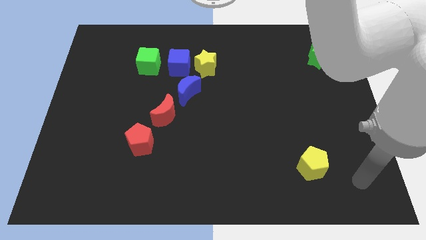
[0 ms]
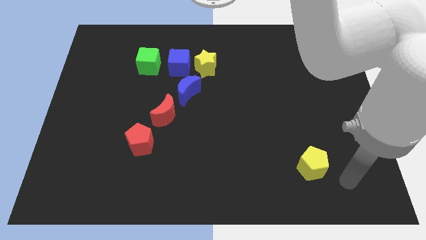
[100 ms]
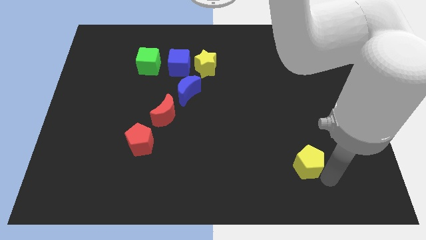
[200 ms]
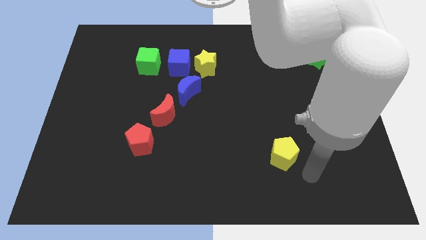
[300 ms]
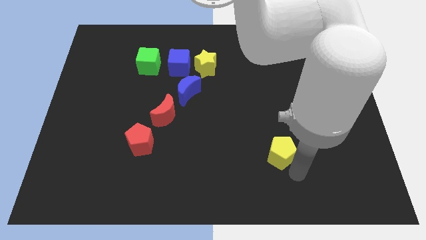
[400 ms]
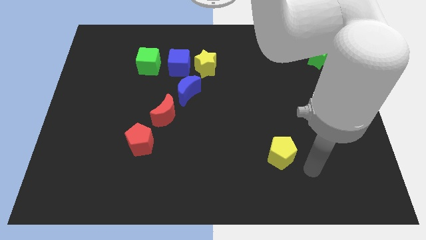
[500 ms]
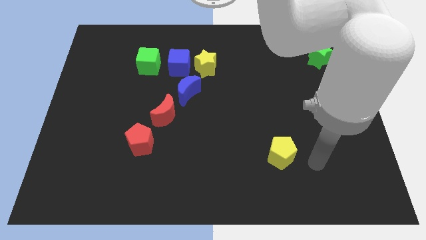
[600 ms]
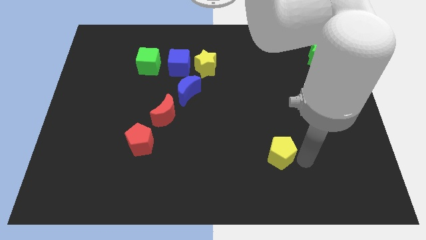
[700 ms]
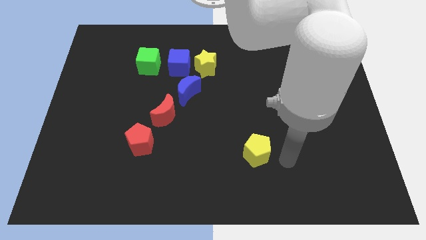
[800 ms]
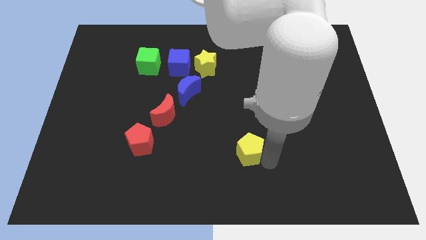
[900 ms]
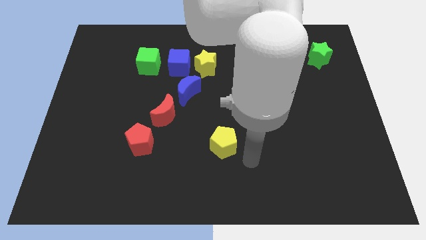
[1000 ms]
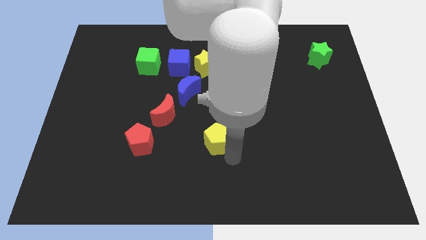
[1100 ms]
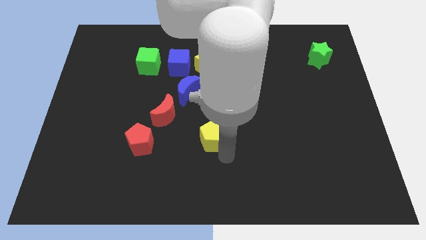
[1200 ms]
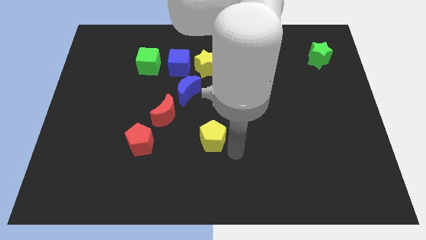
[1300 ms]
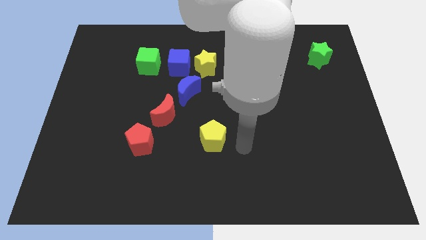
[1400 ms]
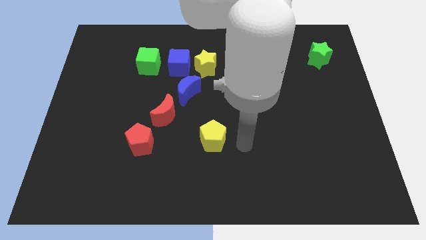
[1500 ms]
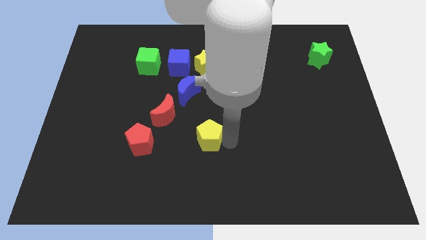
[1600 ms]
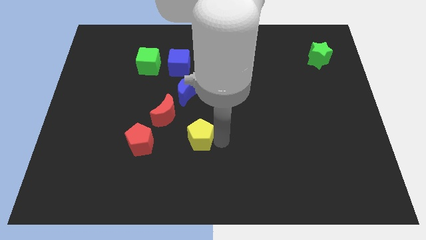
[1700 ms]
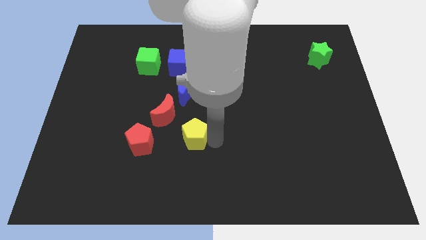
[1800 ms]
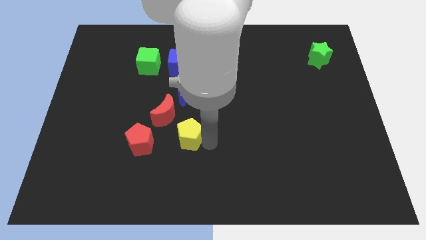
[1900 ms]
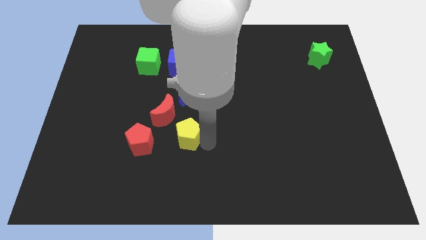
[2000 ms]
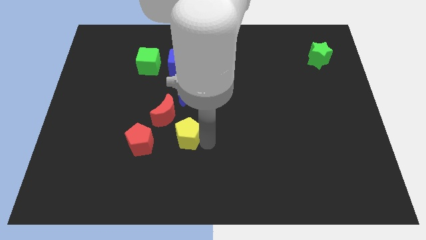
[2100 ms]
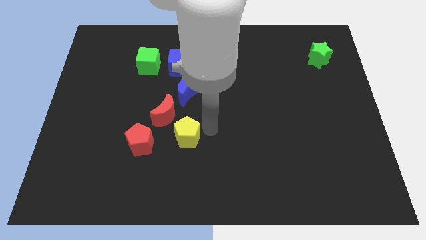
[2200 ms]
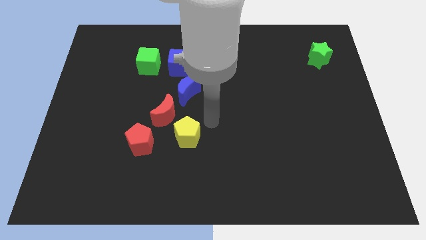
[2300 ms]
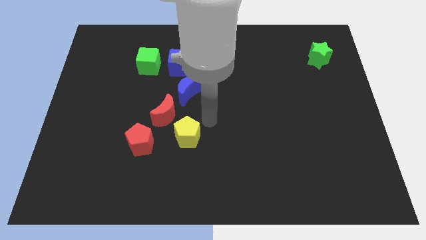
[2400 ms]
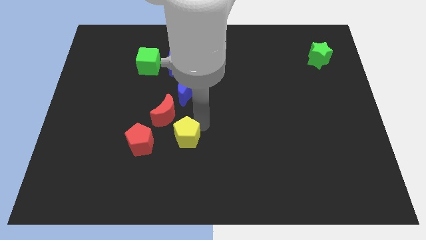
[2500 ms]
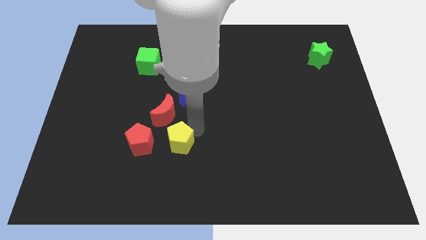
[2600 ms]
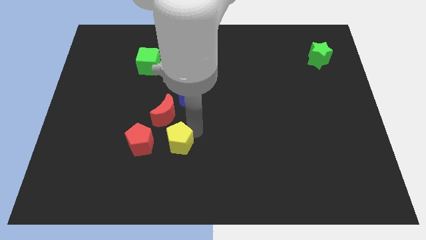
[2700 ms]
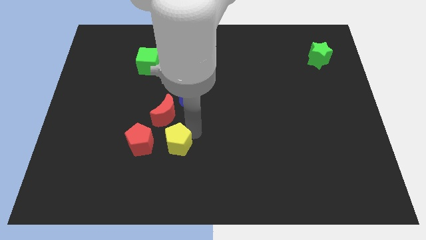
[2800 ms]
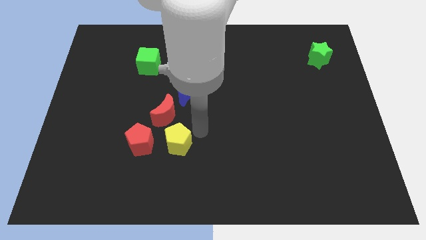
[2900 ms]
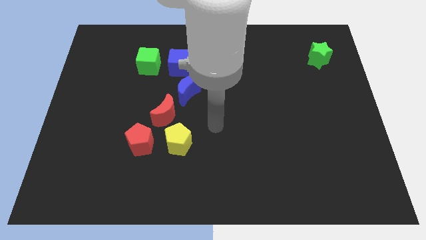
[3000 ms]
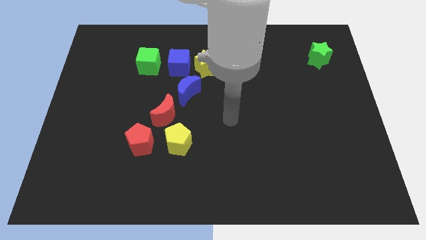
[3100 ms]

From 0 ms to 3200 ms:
place the yellow pentagon diagonal bottom right to the red moon

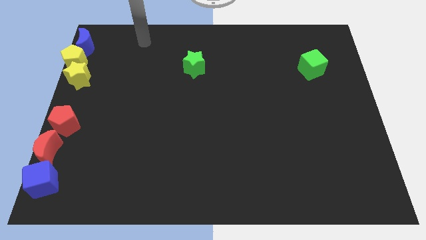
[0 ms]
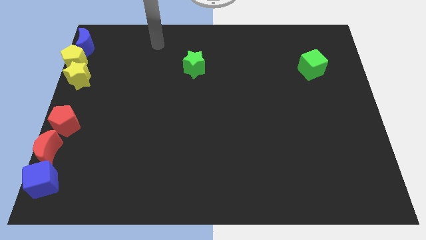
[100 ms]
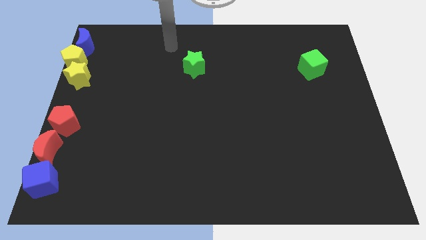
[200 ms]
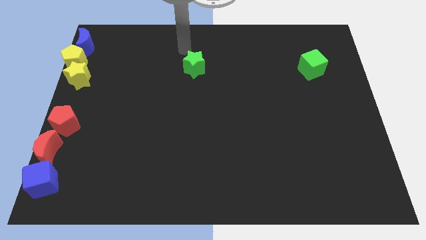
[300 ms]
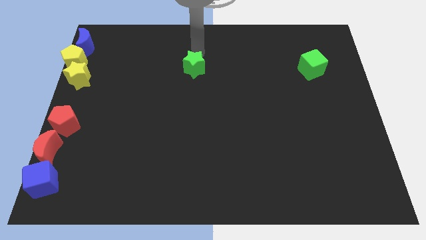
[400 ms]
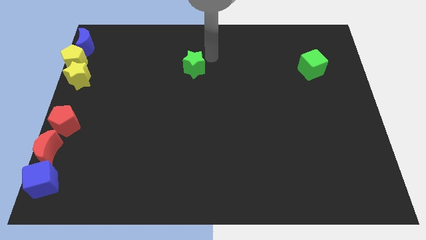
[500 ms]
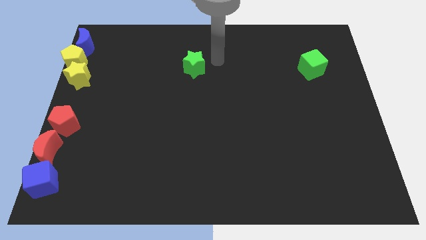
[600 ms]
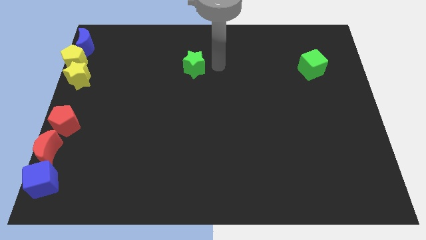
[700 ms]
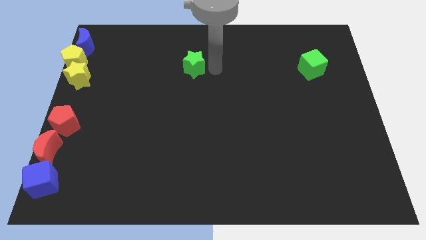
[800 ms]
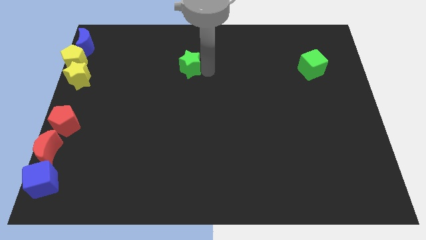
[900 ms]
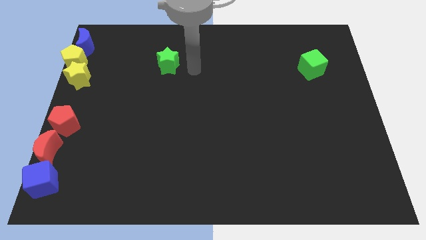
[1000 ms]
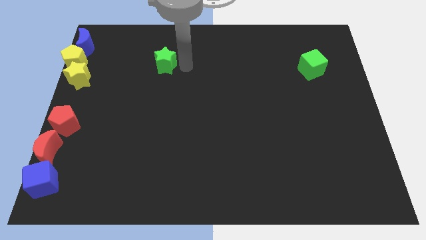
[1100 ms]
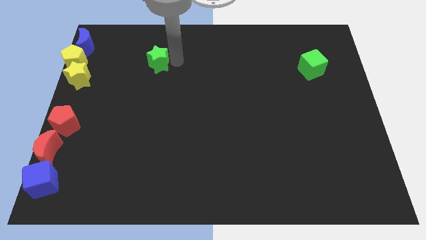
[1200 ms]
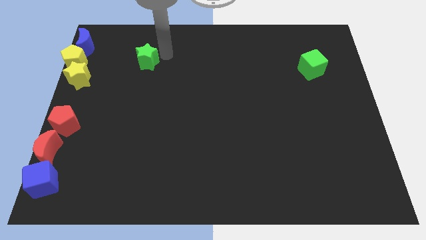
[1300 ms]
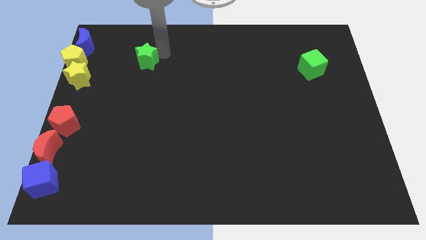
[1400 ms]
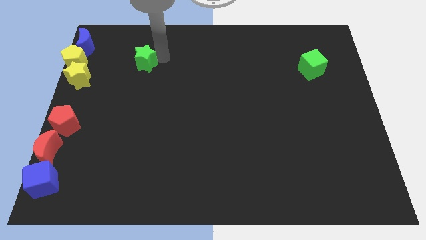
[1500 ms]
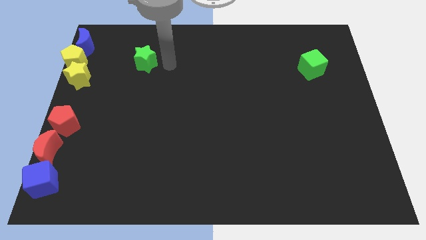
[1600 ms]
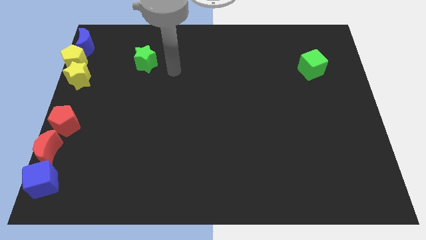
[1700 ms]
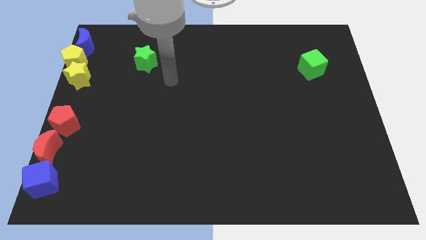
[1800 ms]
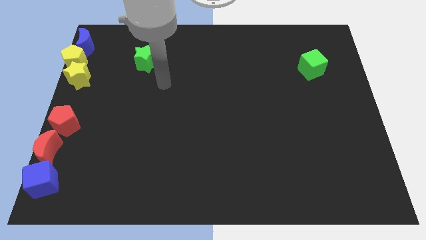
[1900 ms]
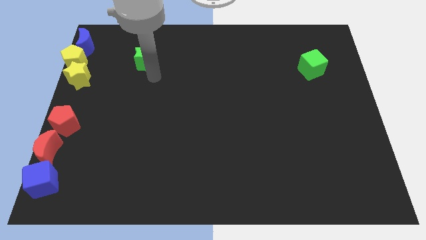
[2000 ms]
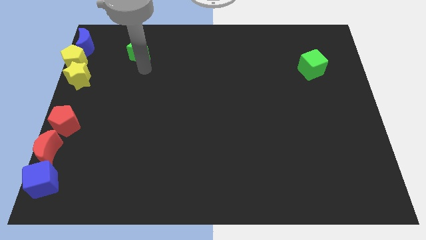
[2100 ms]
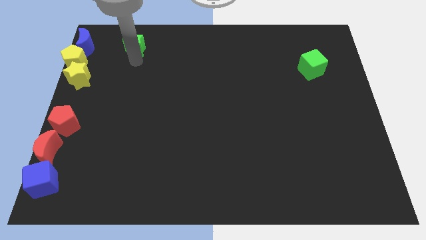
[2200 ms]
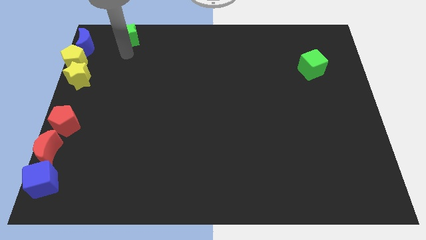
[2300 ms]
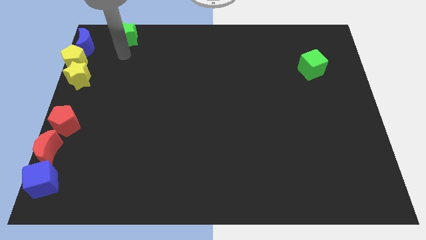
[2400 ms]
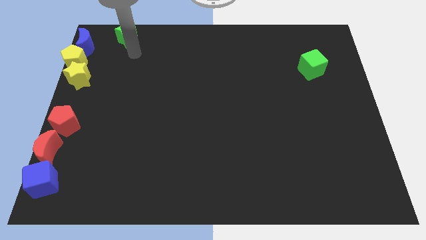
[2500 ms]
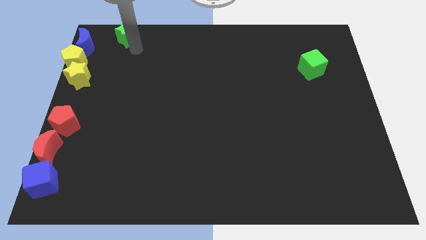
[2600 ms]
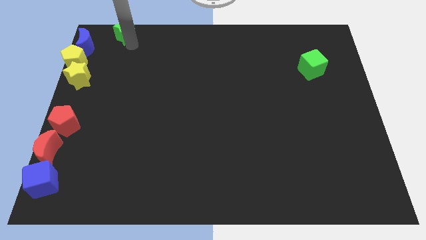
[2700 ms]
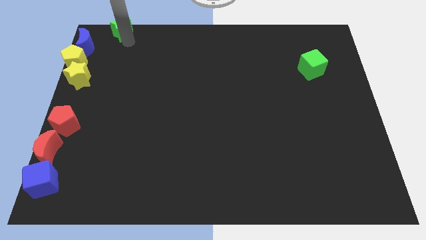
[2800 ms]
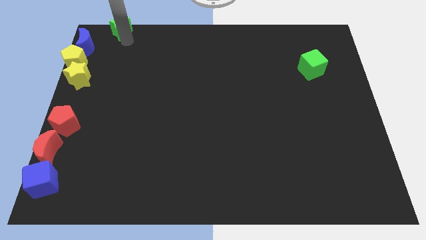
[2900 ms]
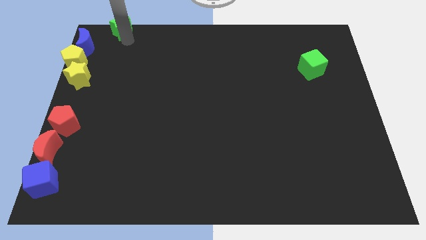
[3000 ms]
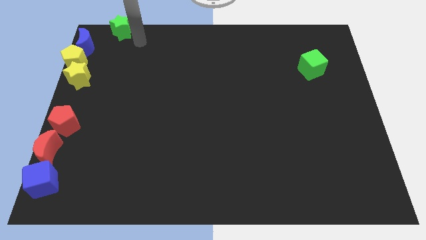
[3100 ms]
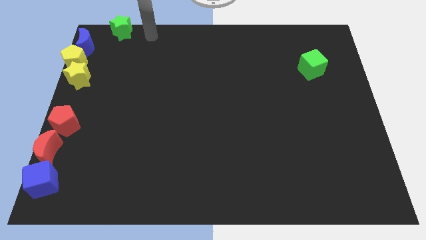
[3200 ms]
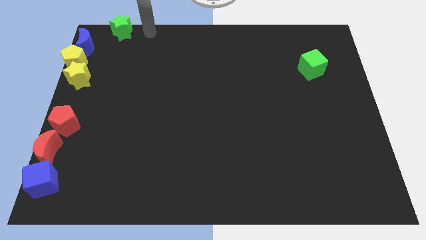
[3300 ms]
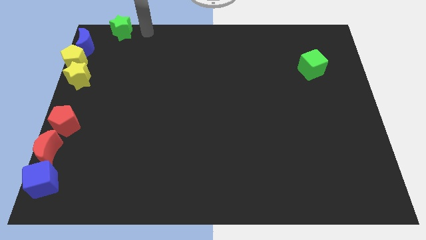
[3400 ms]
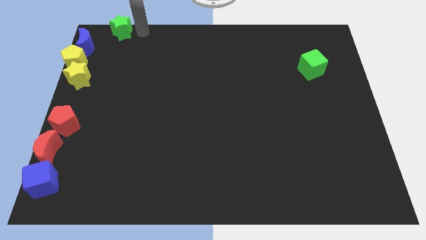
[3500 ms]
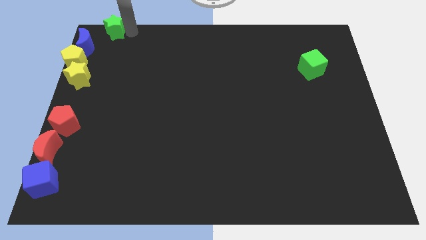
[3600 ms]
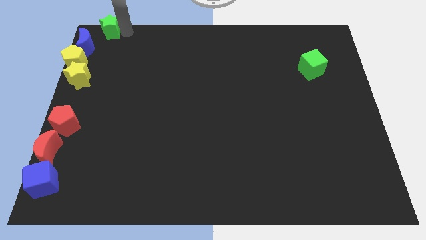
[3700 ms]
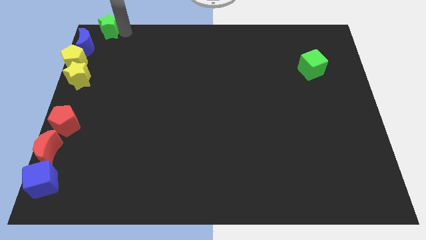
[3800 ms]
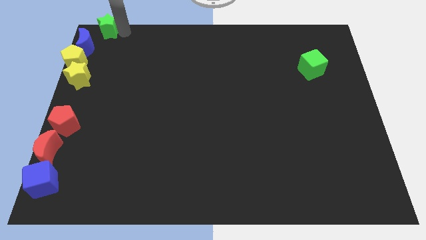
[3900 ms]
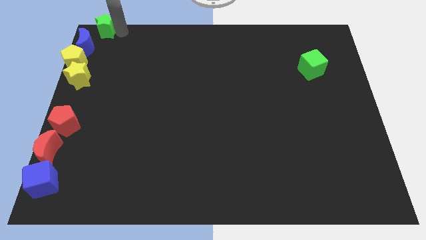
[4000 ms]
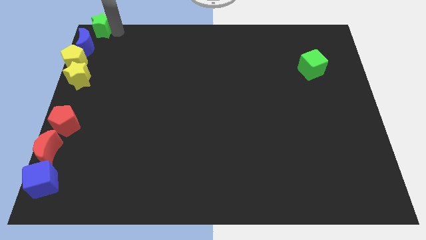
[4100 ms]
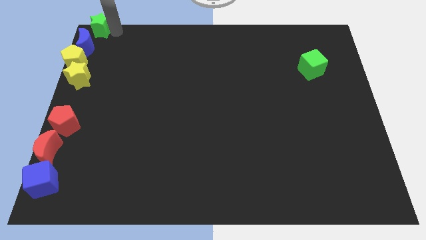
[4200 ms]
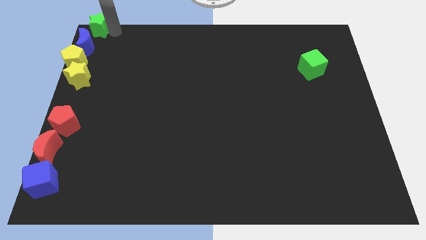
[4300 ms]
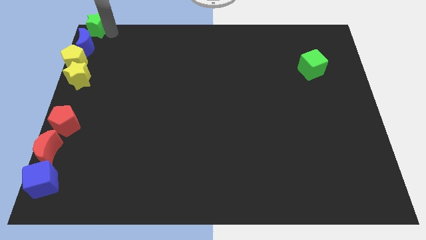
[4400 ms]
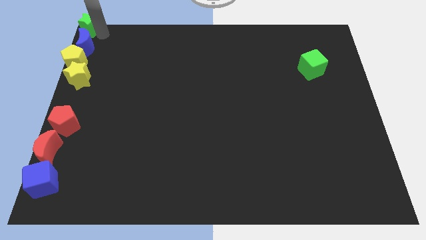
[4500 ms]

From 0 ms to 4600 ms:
place green star above blue moon

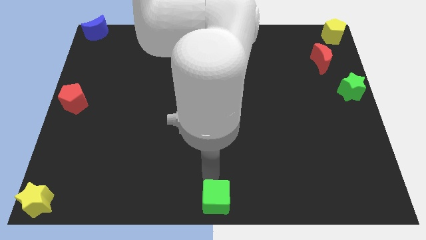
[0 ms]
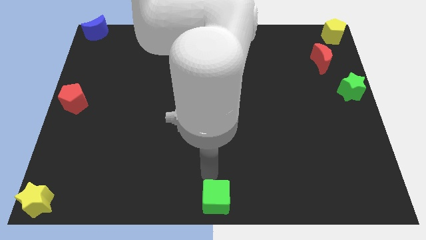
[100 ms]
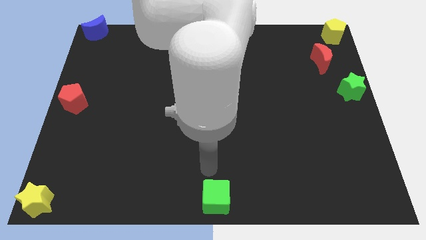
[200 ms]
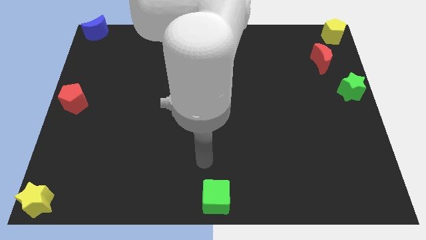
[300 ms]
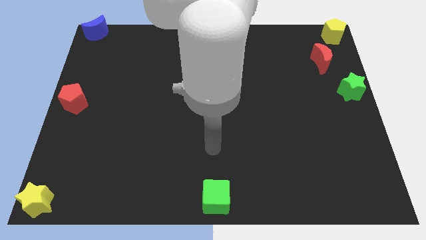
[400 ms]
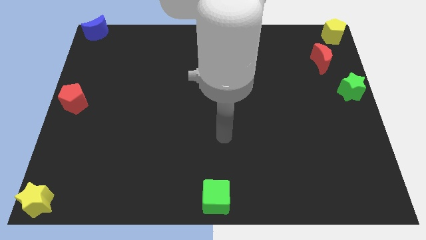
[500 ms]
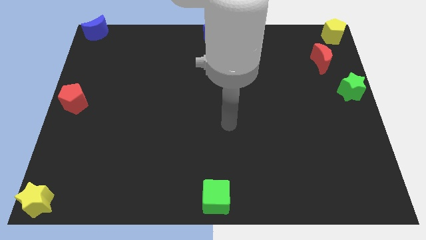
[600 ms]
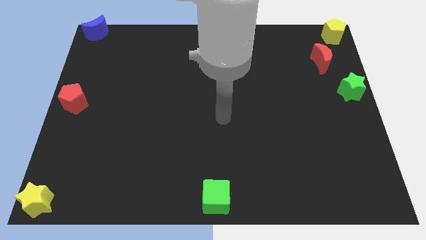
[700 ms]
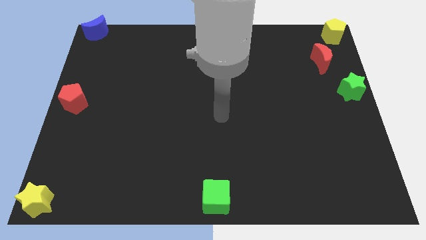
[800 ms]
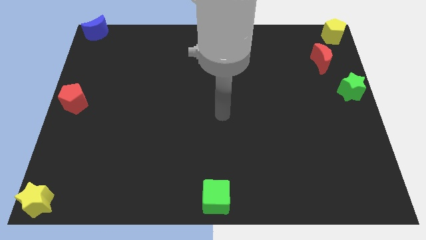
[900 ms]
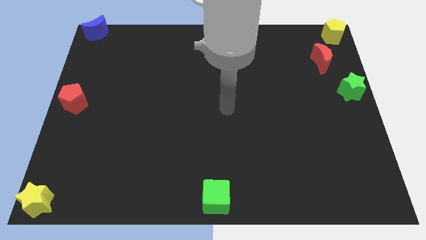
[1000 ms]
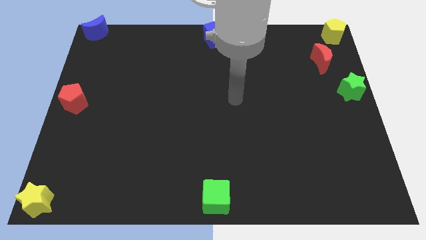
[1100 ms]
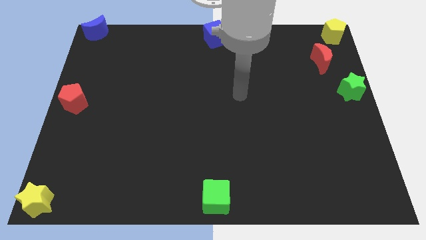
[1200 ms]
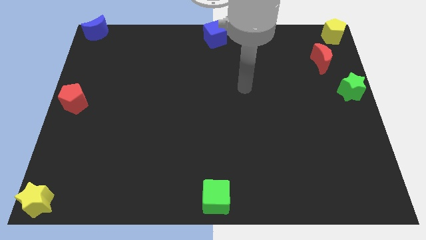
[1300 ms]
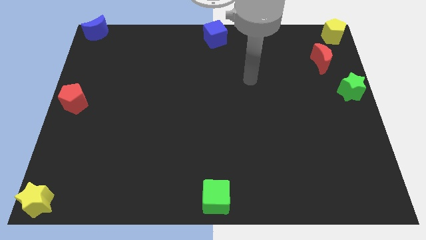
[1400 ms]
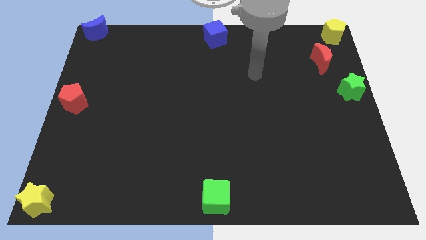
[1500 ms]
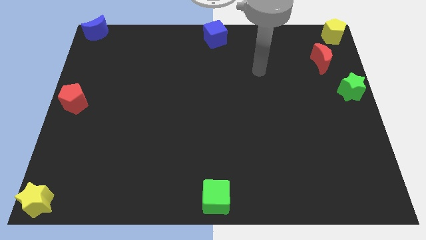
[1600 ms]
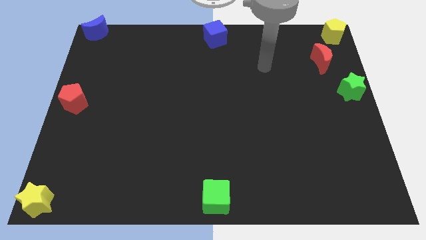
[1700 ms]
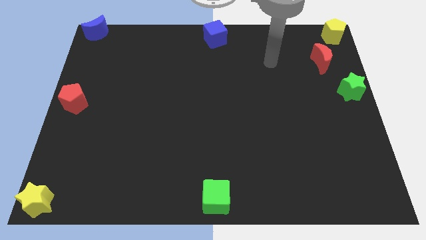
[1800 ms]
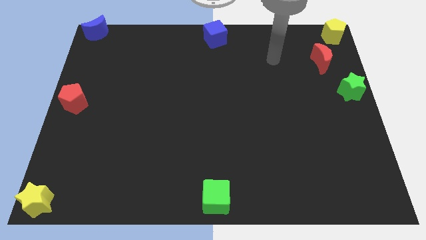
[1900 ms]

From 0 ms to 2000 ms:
move your arm towards the top side of the board
